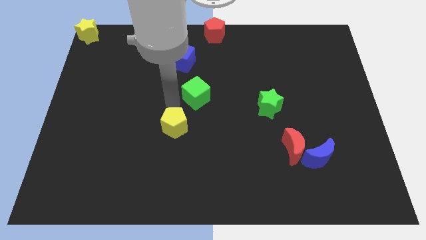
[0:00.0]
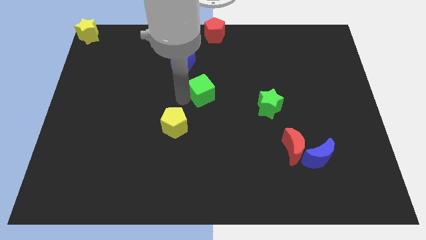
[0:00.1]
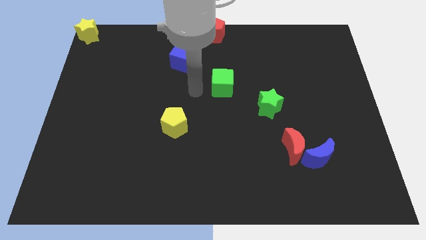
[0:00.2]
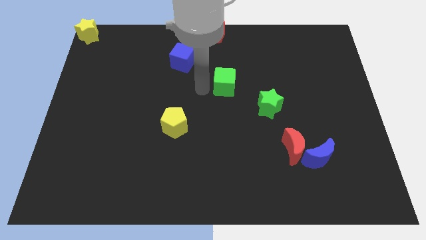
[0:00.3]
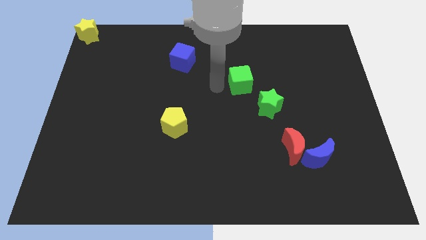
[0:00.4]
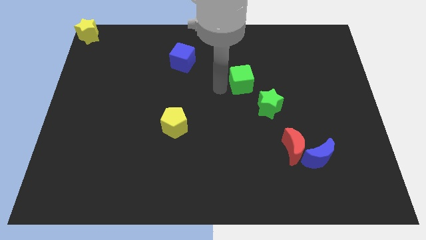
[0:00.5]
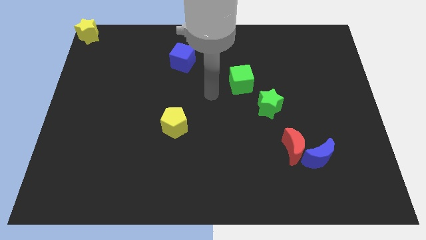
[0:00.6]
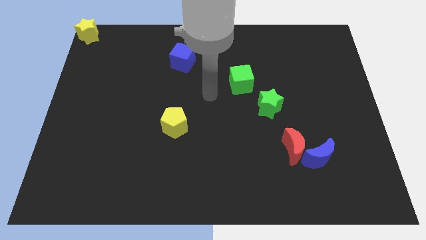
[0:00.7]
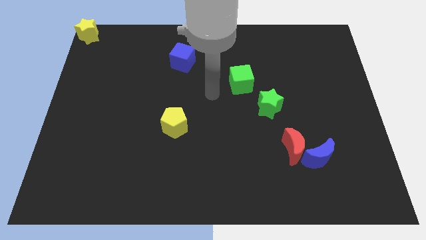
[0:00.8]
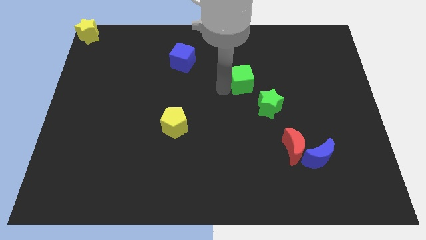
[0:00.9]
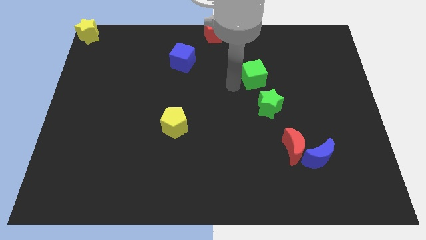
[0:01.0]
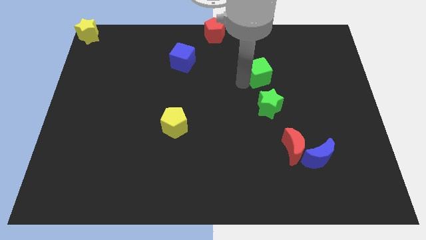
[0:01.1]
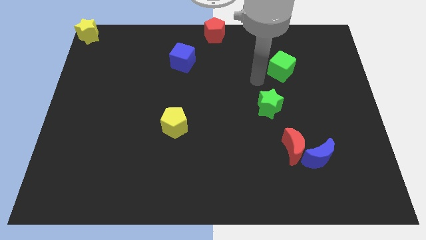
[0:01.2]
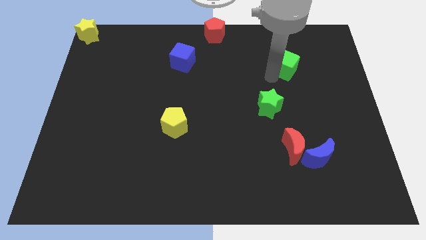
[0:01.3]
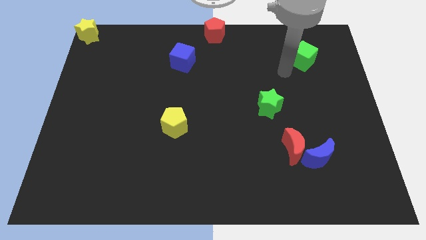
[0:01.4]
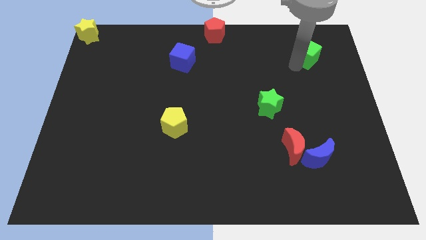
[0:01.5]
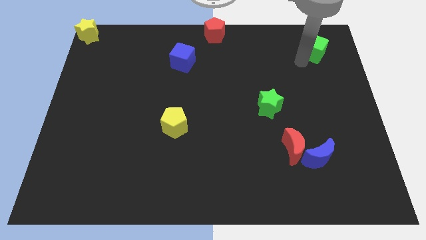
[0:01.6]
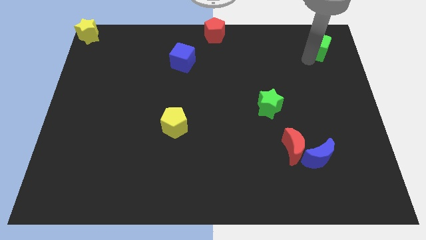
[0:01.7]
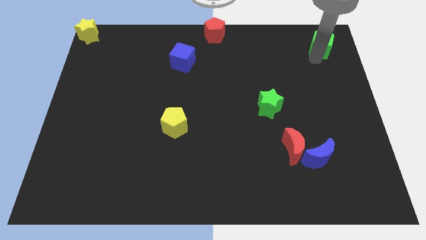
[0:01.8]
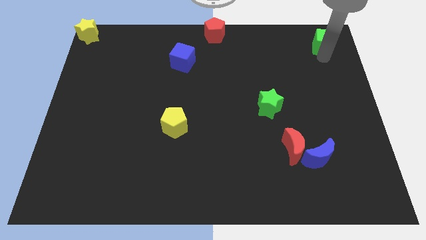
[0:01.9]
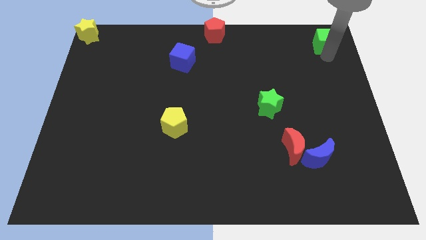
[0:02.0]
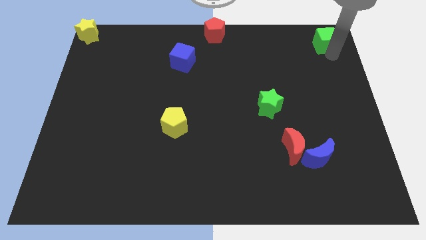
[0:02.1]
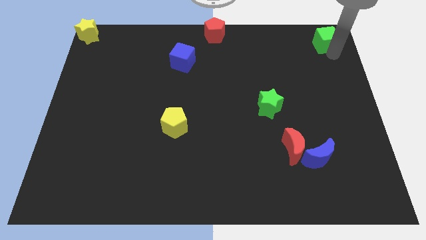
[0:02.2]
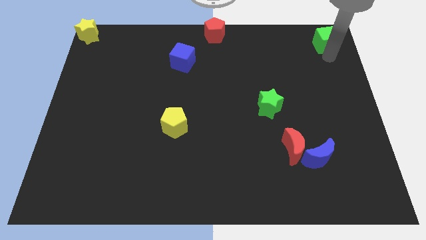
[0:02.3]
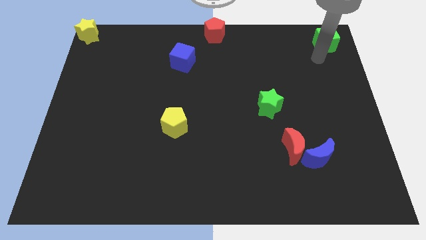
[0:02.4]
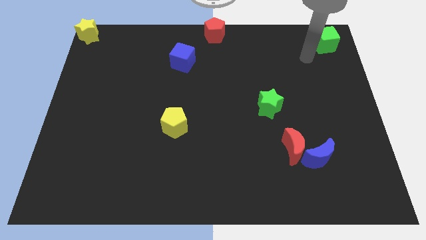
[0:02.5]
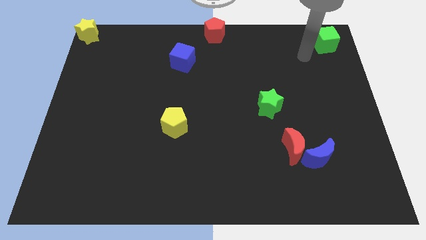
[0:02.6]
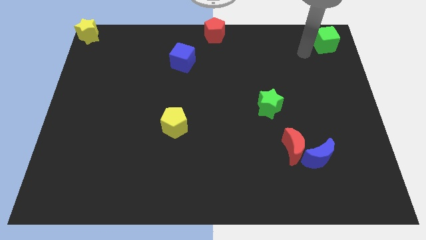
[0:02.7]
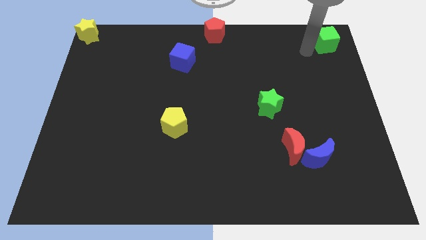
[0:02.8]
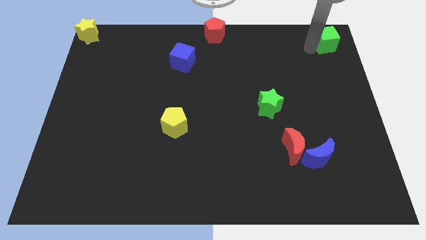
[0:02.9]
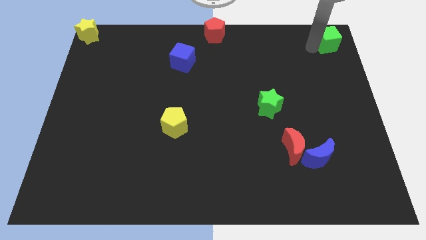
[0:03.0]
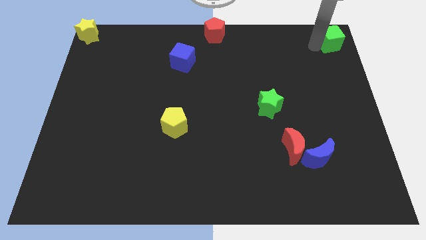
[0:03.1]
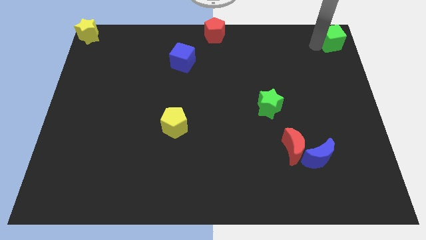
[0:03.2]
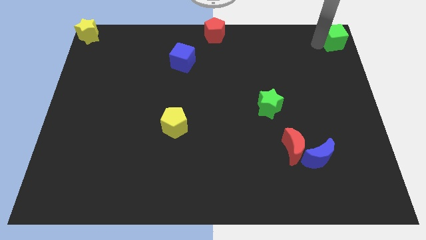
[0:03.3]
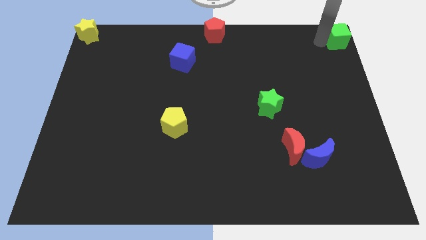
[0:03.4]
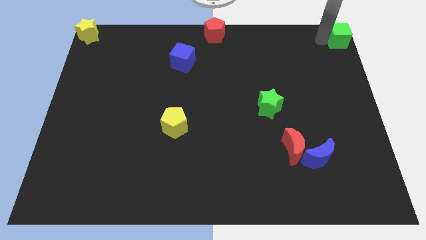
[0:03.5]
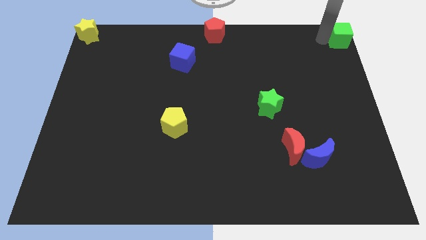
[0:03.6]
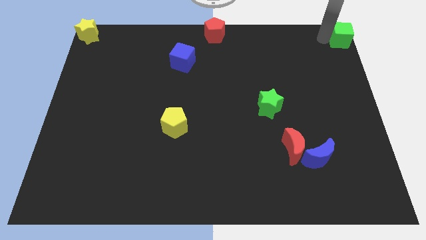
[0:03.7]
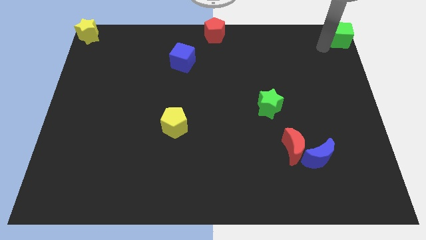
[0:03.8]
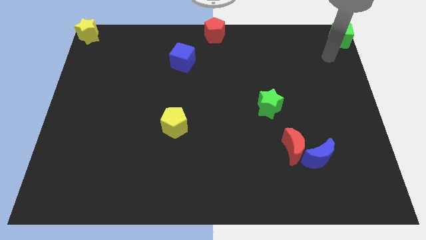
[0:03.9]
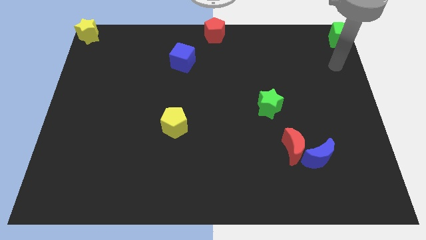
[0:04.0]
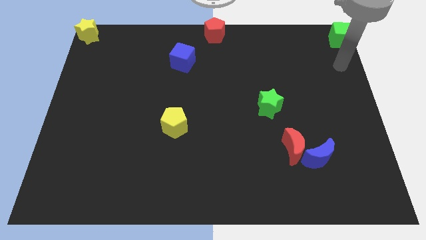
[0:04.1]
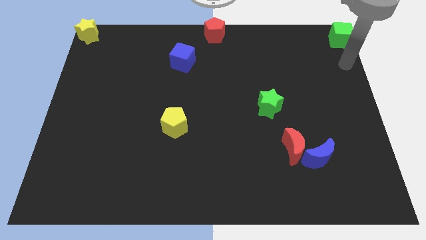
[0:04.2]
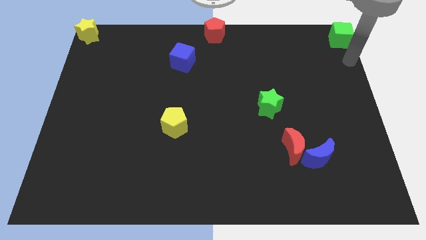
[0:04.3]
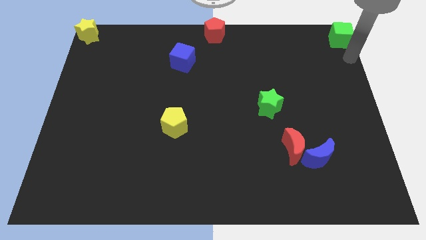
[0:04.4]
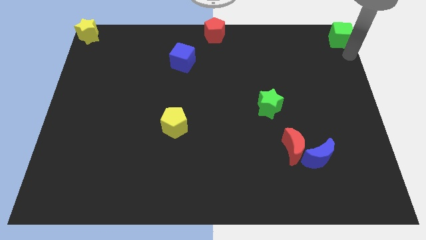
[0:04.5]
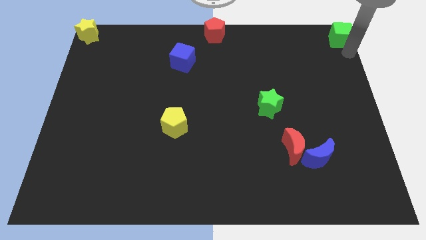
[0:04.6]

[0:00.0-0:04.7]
push green cube to the top right corner

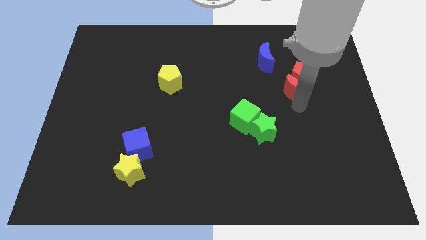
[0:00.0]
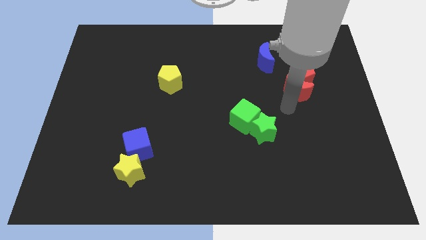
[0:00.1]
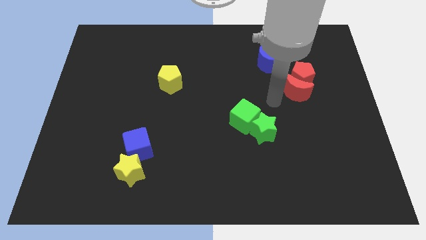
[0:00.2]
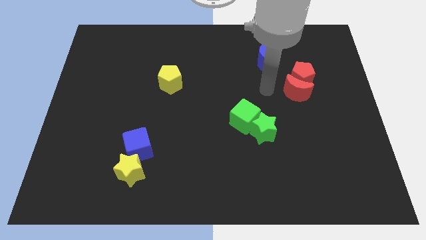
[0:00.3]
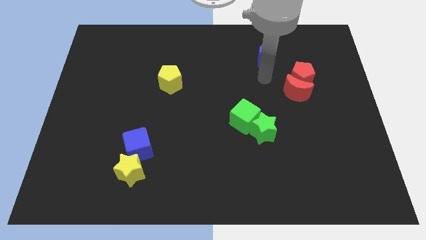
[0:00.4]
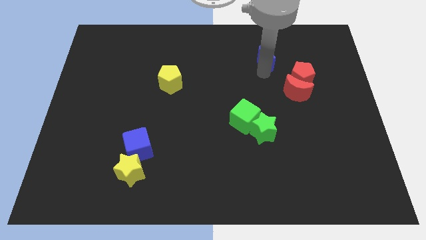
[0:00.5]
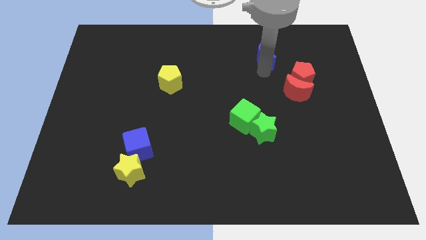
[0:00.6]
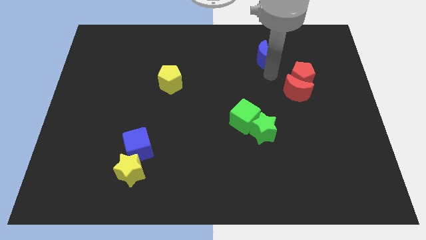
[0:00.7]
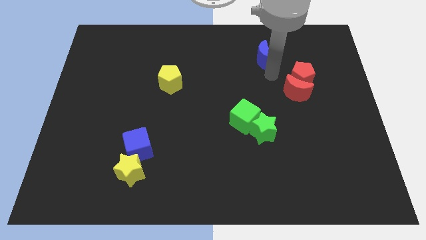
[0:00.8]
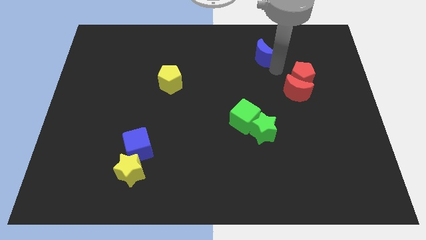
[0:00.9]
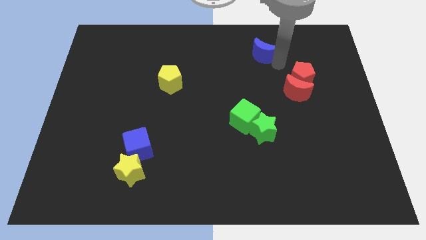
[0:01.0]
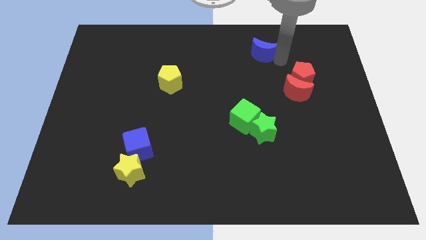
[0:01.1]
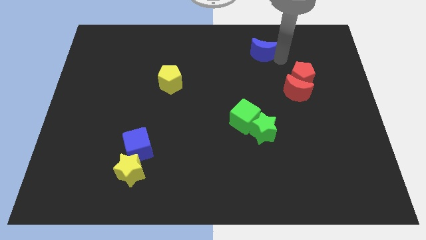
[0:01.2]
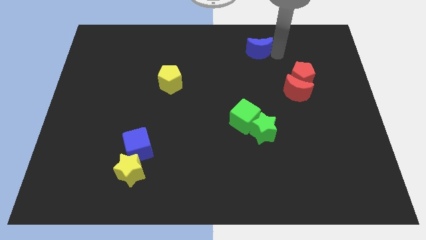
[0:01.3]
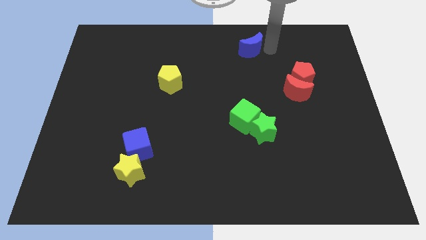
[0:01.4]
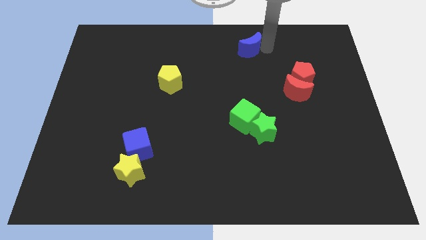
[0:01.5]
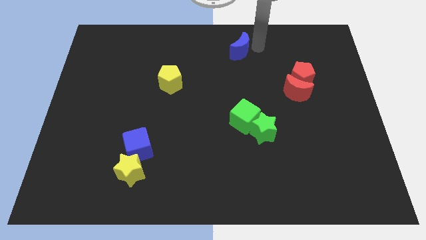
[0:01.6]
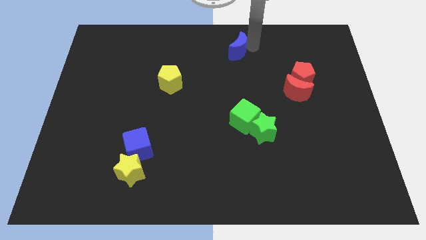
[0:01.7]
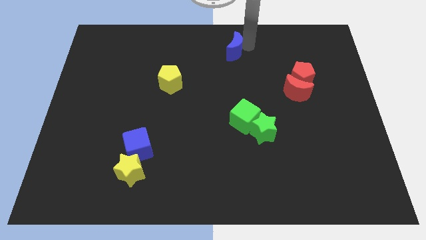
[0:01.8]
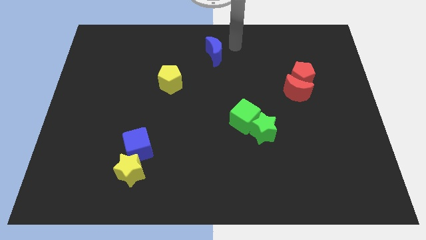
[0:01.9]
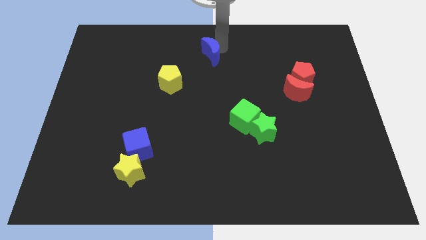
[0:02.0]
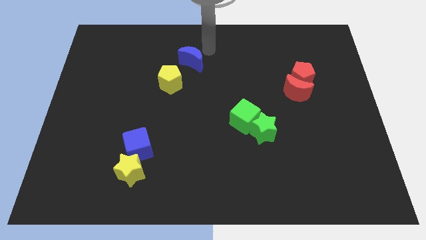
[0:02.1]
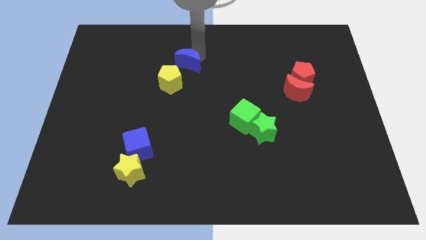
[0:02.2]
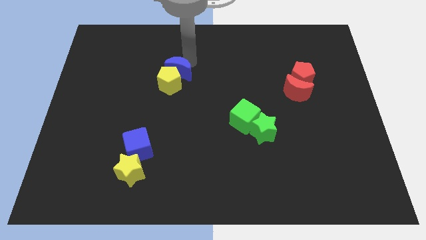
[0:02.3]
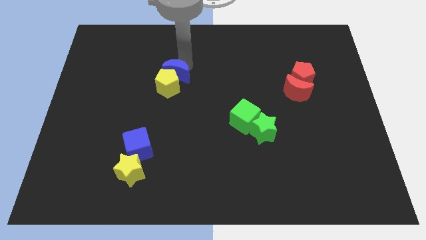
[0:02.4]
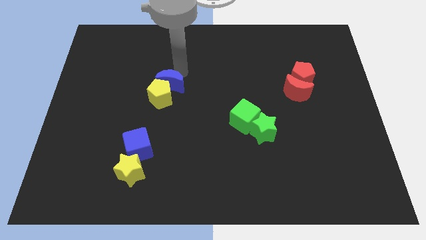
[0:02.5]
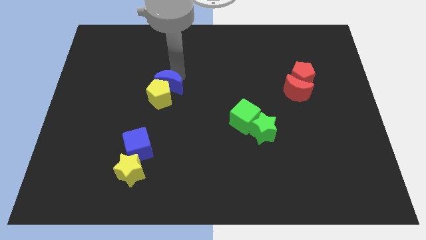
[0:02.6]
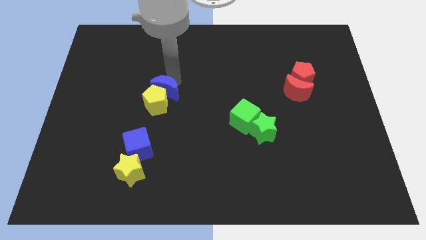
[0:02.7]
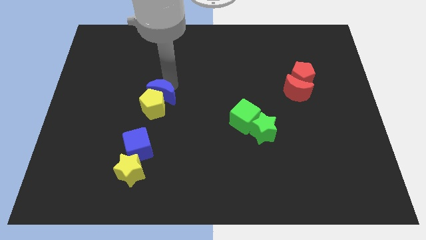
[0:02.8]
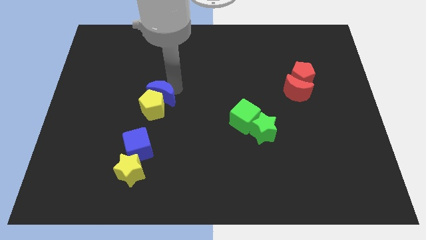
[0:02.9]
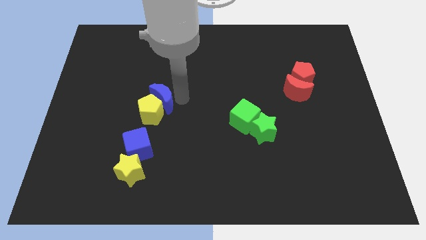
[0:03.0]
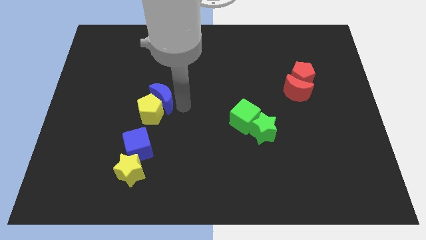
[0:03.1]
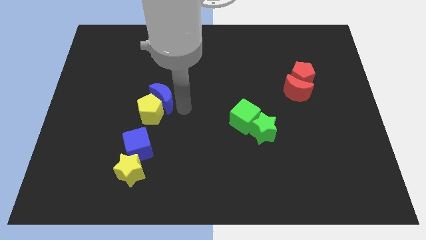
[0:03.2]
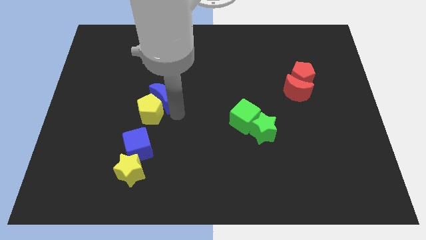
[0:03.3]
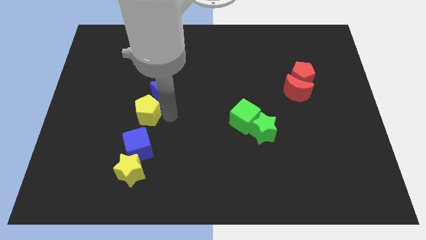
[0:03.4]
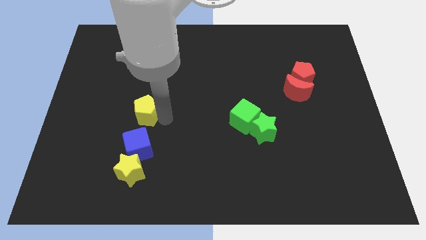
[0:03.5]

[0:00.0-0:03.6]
push the blue moon into the yellow pentagon

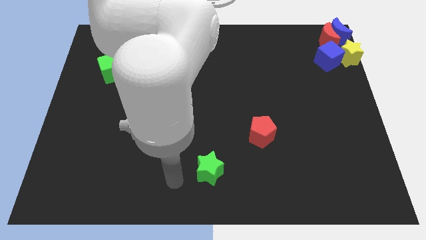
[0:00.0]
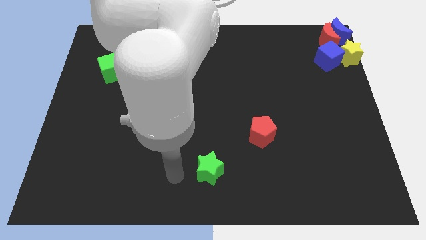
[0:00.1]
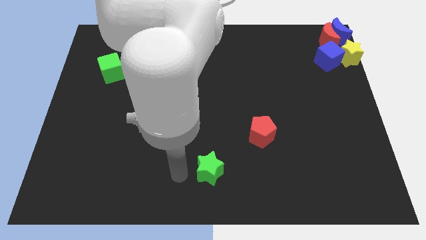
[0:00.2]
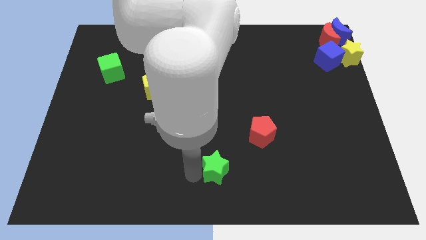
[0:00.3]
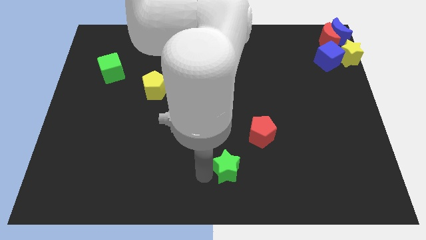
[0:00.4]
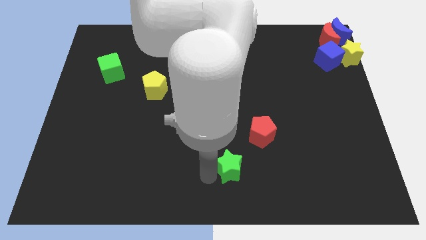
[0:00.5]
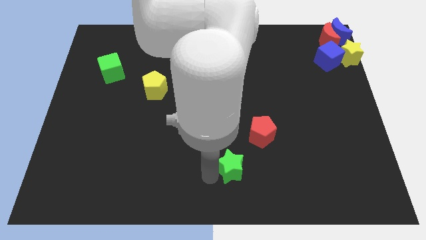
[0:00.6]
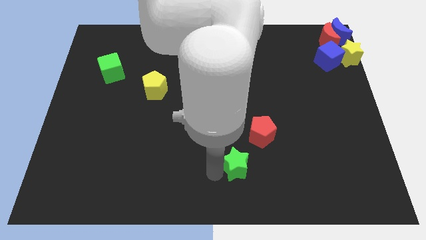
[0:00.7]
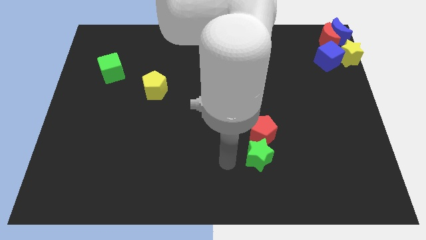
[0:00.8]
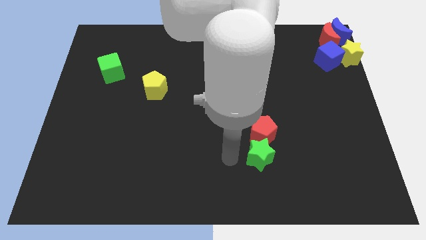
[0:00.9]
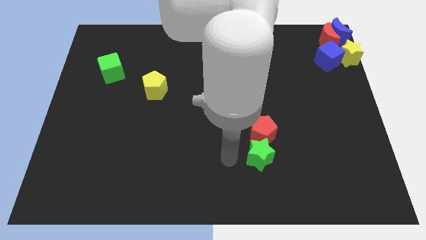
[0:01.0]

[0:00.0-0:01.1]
put the green star at the bottom of the red pentagon
